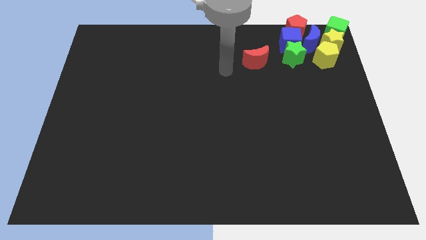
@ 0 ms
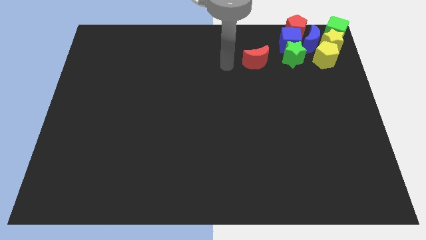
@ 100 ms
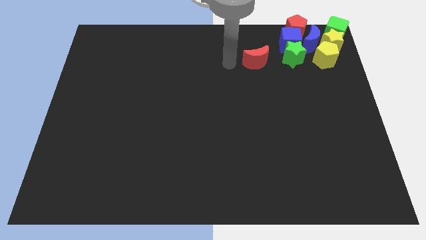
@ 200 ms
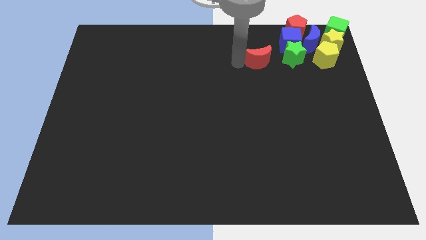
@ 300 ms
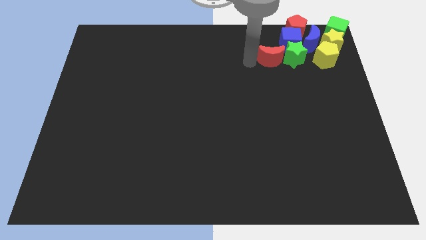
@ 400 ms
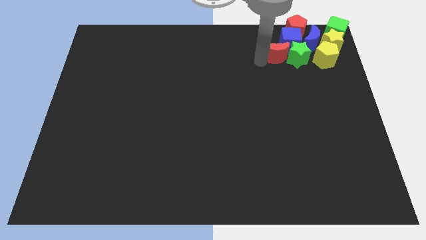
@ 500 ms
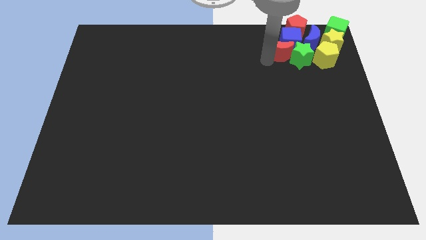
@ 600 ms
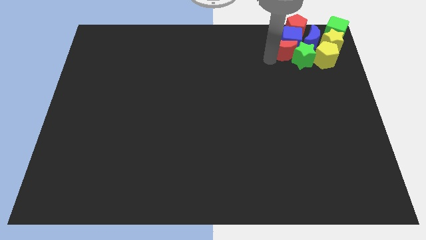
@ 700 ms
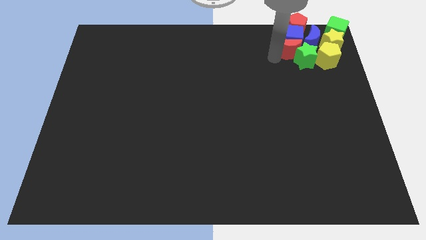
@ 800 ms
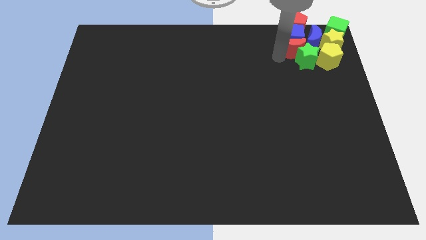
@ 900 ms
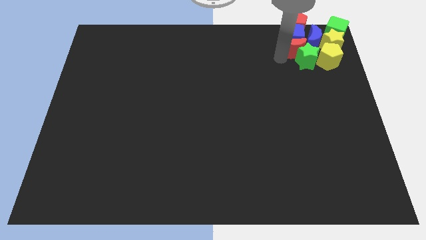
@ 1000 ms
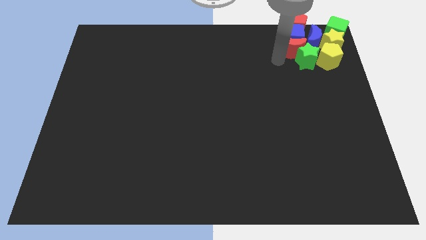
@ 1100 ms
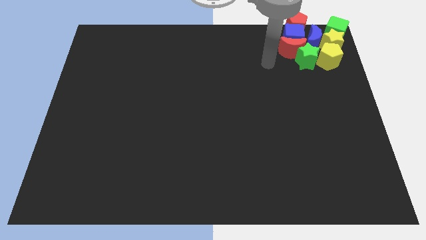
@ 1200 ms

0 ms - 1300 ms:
push the red moon into the blue cube

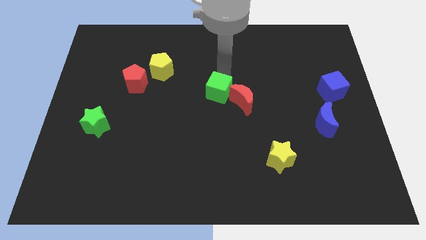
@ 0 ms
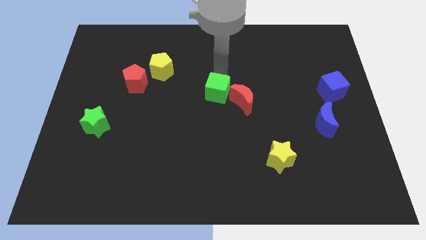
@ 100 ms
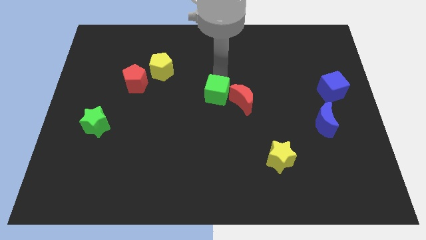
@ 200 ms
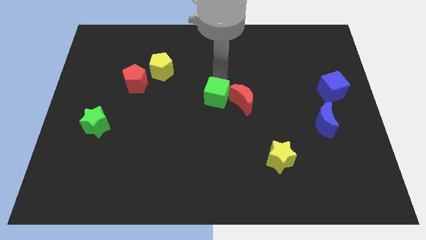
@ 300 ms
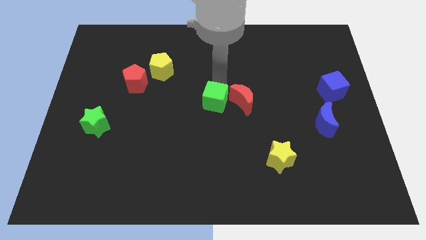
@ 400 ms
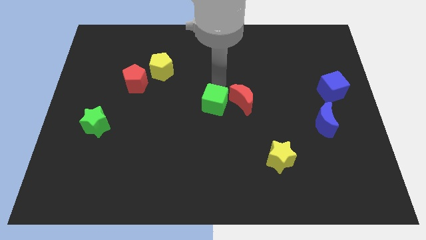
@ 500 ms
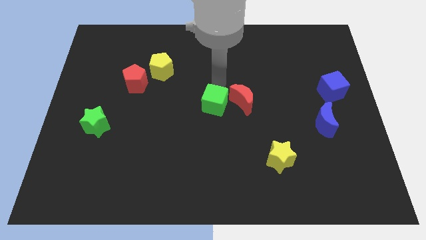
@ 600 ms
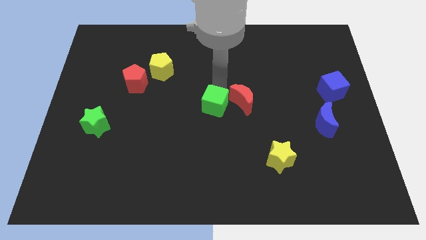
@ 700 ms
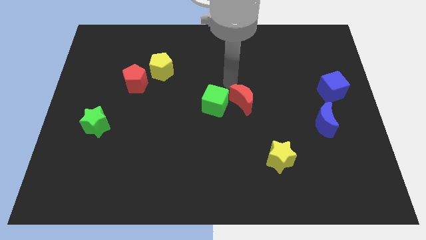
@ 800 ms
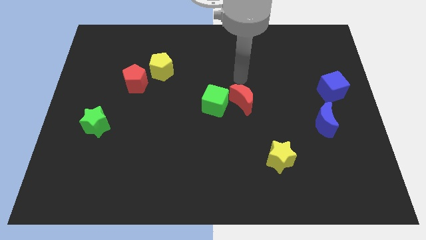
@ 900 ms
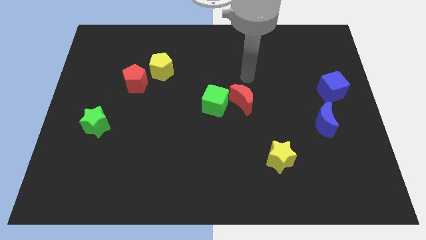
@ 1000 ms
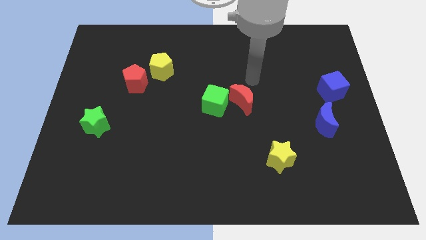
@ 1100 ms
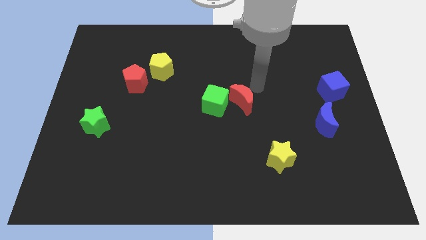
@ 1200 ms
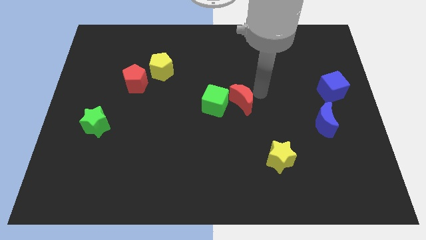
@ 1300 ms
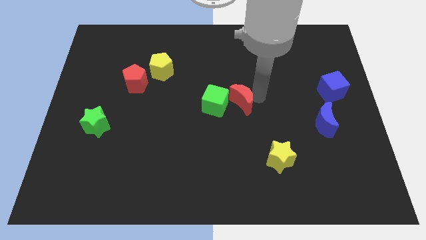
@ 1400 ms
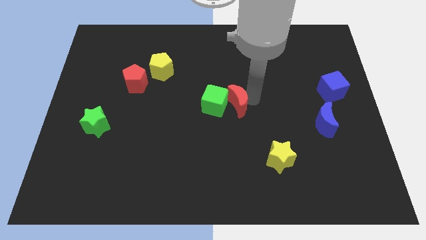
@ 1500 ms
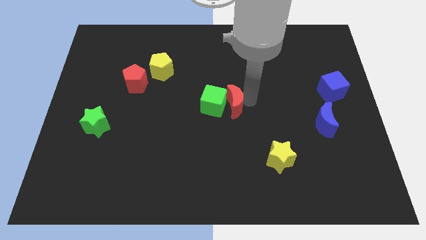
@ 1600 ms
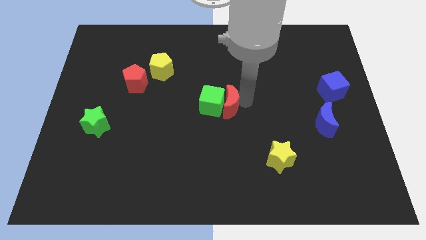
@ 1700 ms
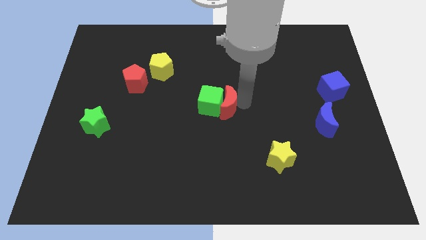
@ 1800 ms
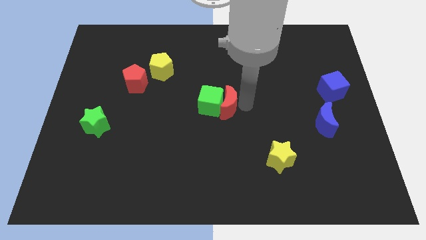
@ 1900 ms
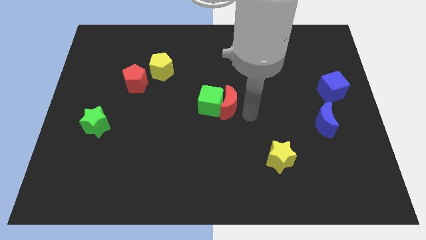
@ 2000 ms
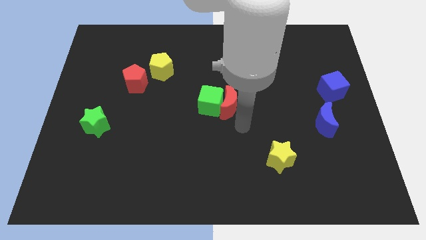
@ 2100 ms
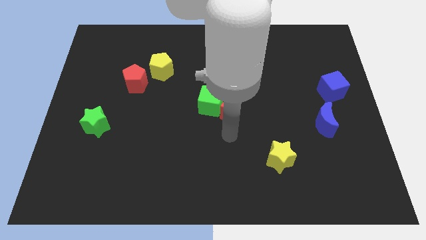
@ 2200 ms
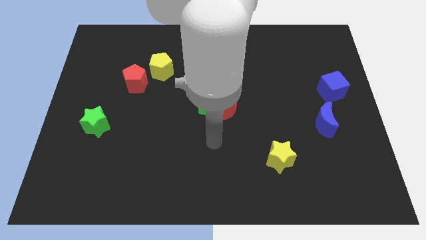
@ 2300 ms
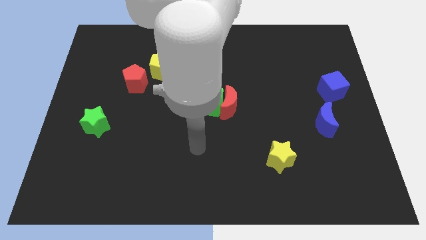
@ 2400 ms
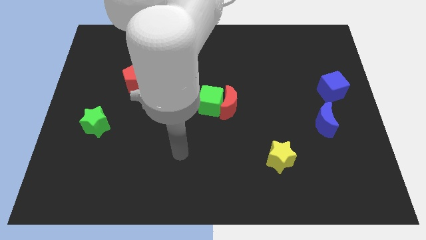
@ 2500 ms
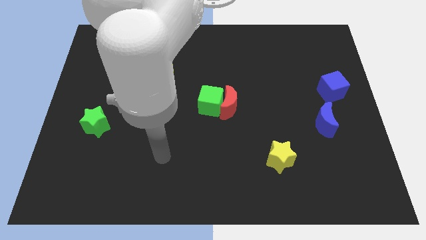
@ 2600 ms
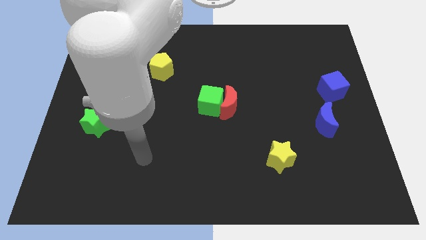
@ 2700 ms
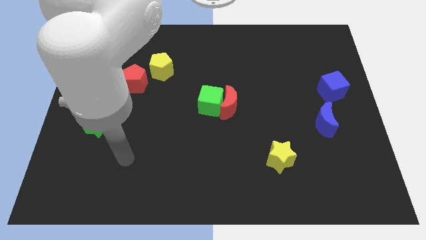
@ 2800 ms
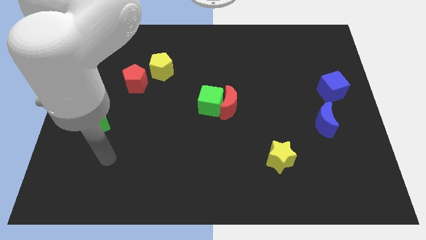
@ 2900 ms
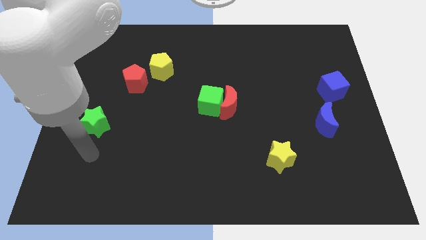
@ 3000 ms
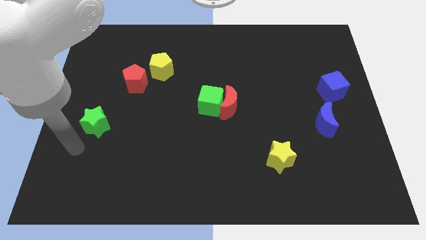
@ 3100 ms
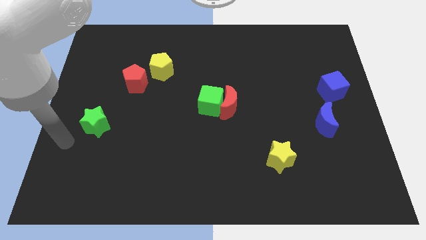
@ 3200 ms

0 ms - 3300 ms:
adjust the green cube and red moon

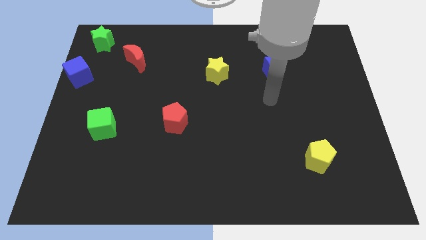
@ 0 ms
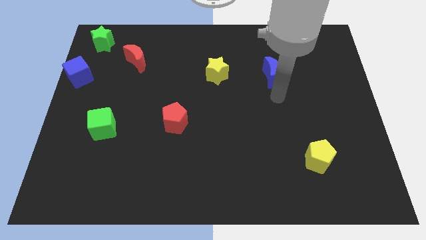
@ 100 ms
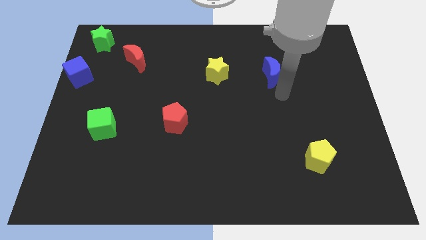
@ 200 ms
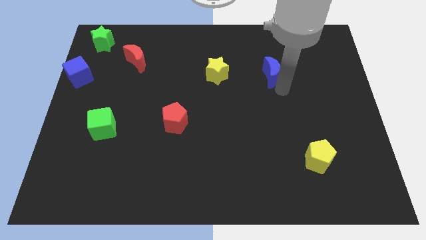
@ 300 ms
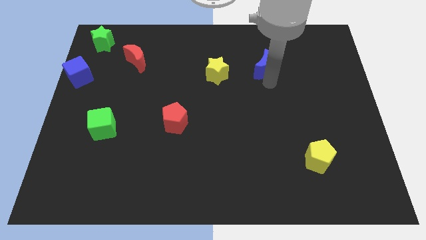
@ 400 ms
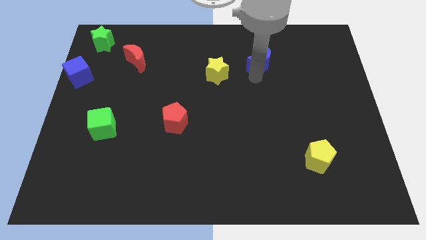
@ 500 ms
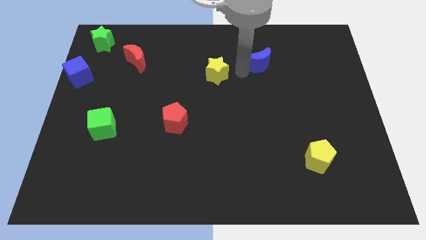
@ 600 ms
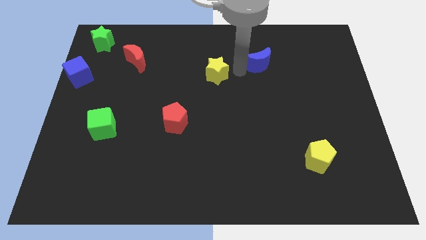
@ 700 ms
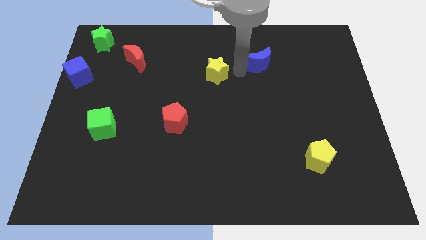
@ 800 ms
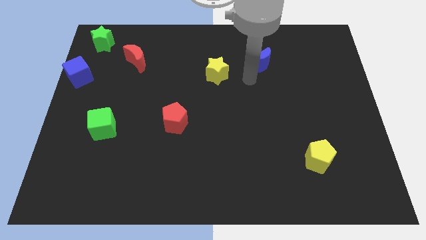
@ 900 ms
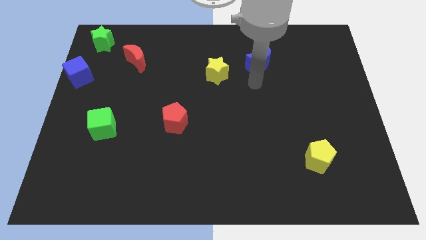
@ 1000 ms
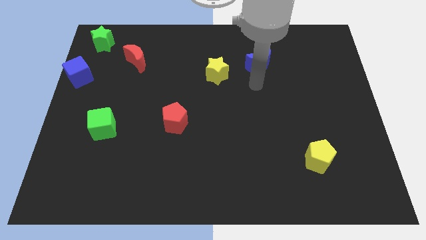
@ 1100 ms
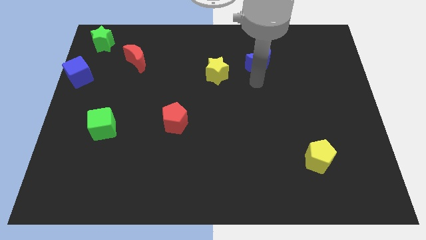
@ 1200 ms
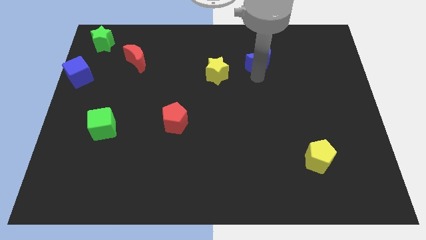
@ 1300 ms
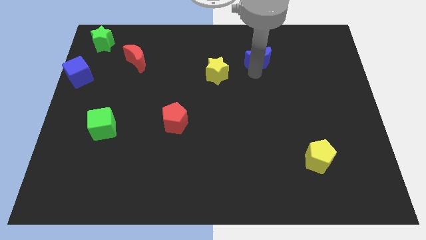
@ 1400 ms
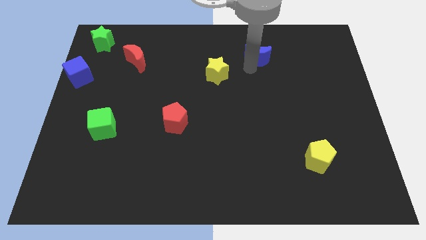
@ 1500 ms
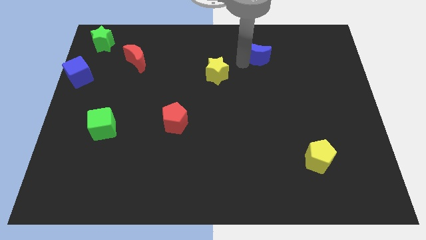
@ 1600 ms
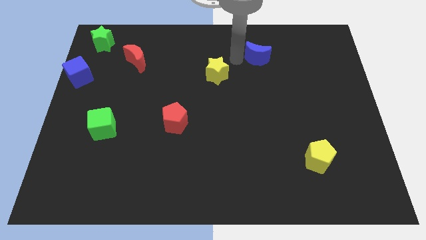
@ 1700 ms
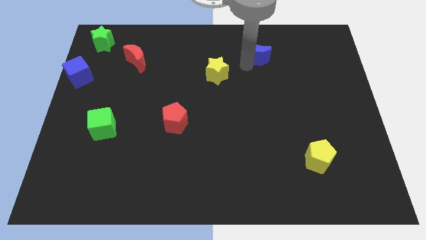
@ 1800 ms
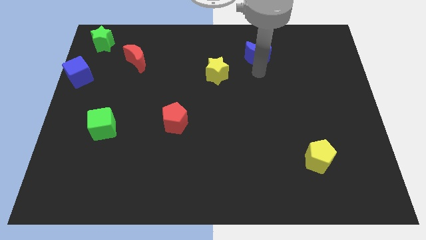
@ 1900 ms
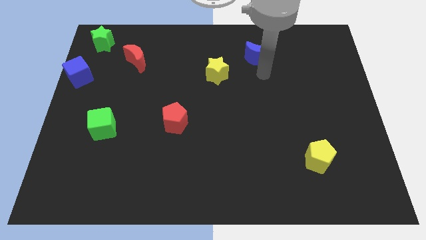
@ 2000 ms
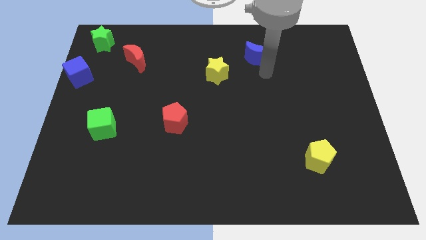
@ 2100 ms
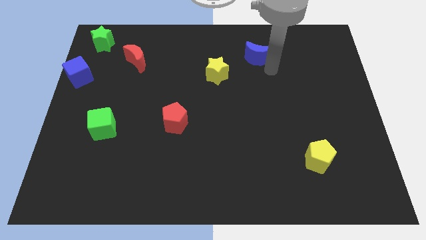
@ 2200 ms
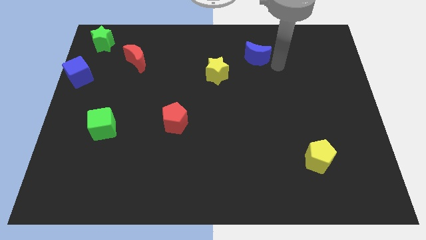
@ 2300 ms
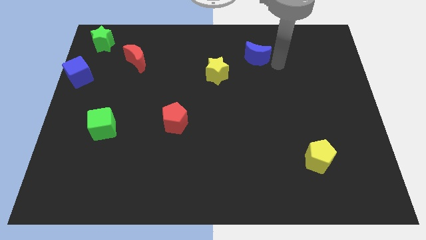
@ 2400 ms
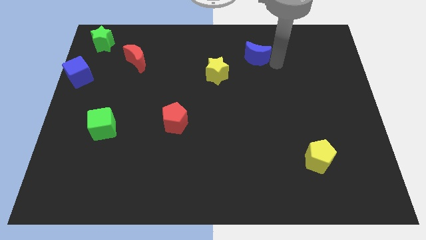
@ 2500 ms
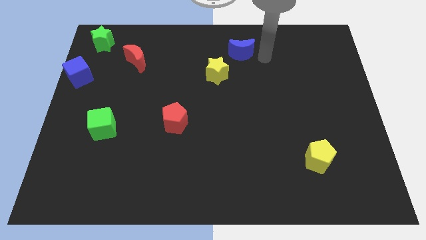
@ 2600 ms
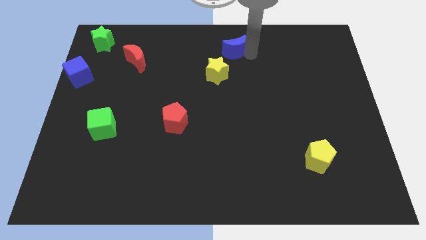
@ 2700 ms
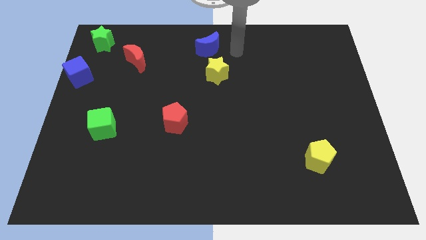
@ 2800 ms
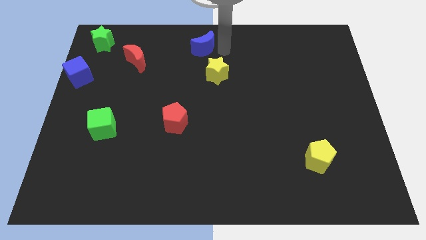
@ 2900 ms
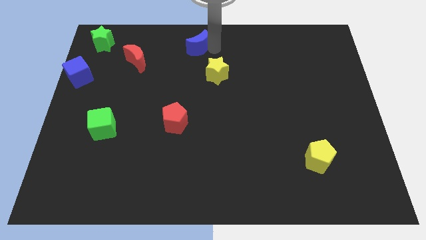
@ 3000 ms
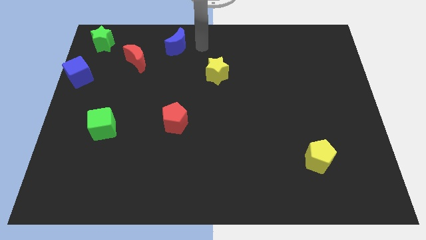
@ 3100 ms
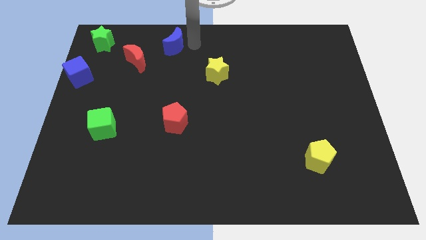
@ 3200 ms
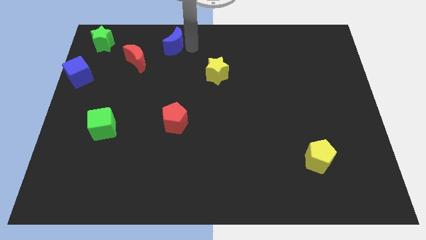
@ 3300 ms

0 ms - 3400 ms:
move blue moon to the top right of red moon

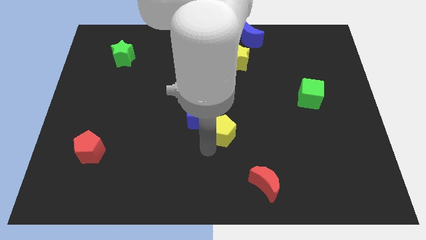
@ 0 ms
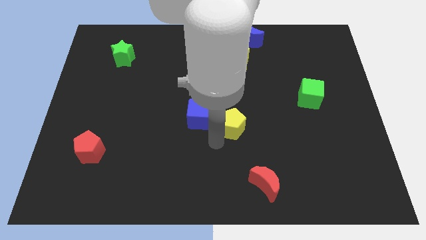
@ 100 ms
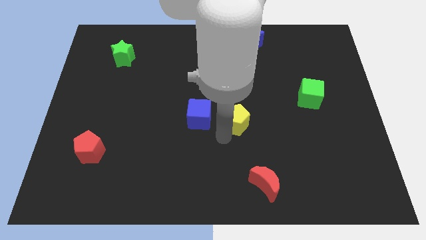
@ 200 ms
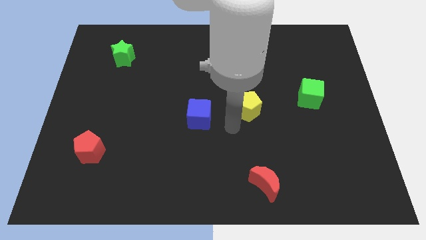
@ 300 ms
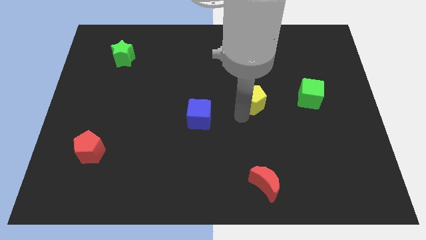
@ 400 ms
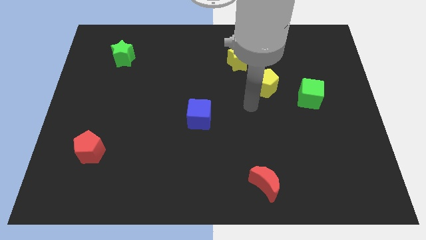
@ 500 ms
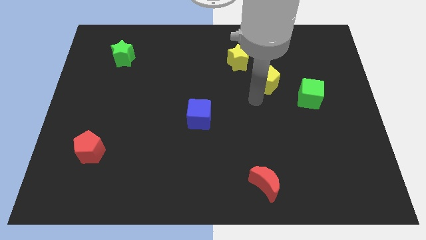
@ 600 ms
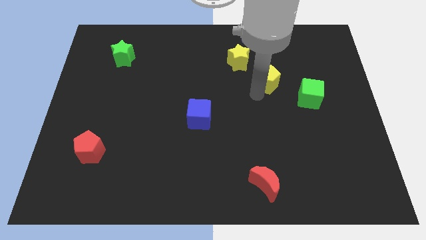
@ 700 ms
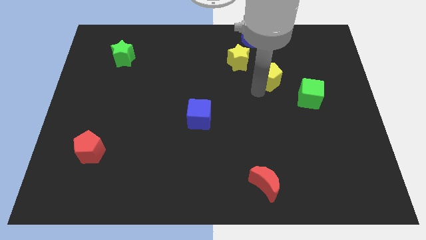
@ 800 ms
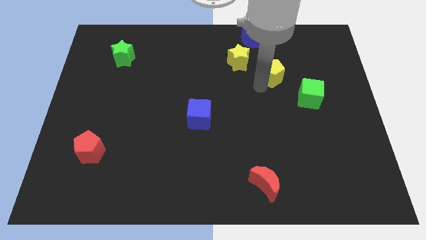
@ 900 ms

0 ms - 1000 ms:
push the yellow pentagon in between the yellow star and green cube

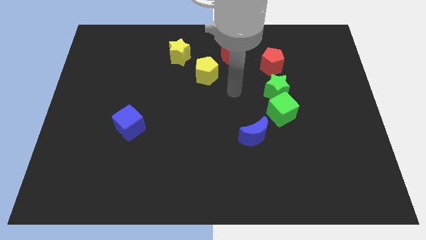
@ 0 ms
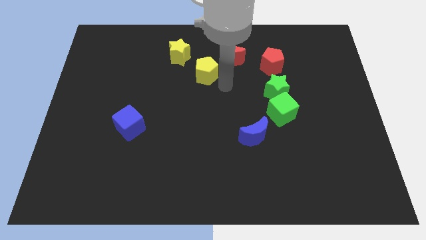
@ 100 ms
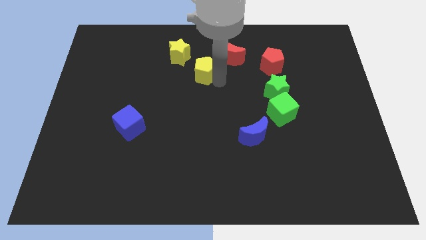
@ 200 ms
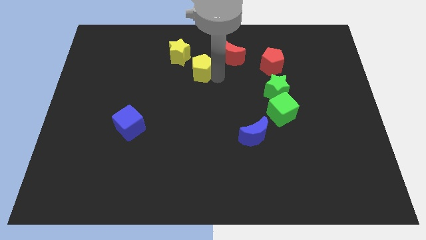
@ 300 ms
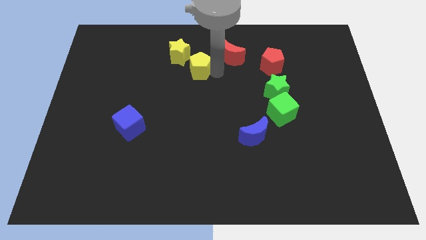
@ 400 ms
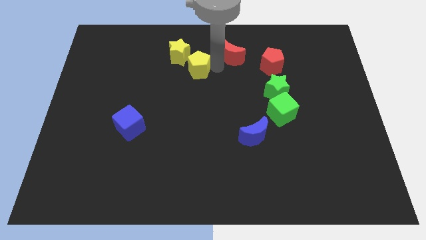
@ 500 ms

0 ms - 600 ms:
move the yellow star up slightly towards the top center
